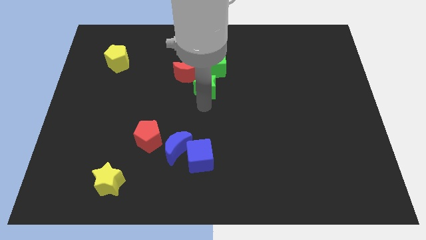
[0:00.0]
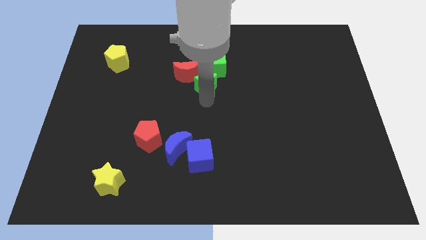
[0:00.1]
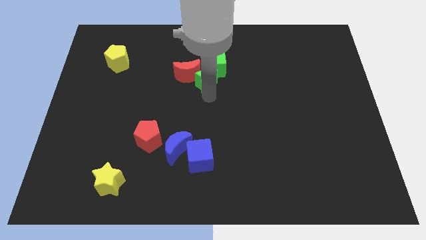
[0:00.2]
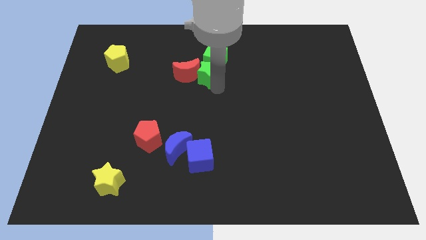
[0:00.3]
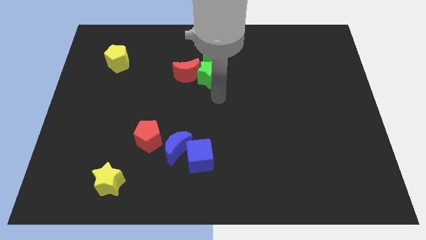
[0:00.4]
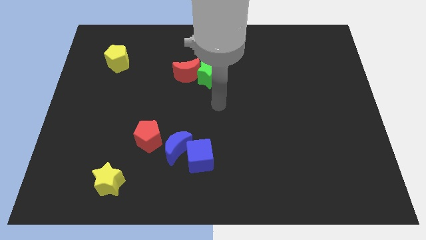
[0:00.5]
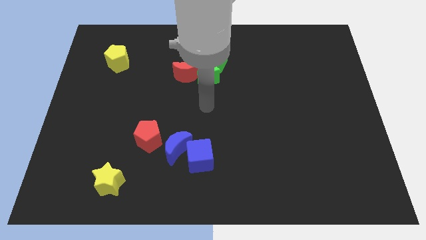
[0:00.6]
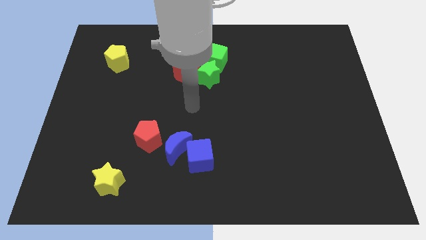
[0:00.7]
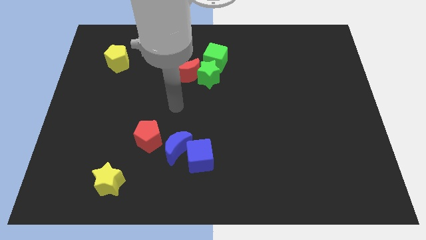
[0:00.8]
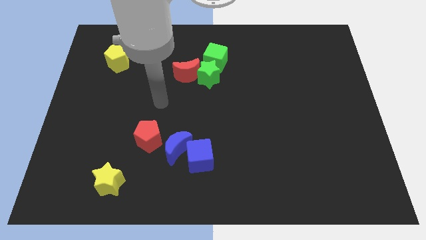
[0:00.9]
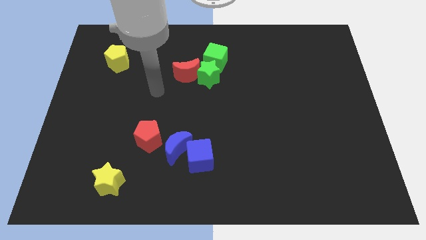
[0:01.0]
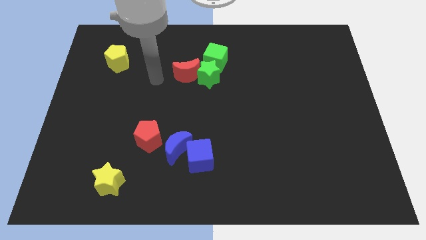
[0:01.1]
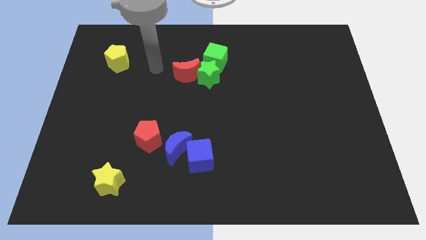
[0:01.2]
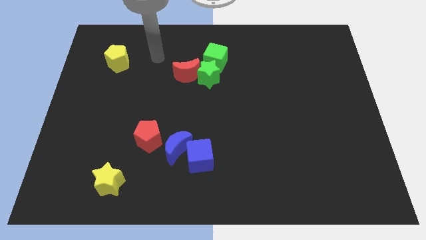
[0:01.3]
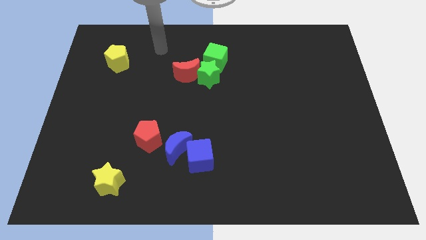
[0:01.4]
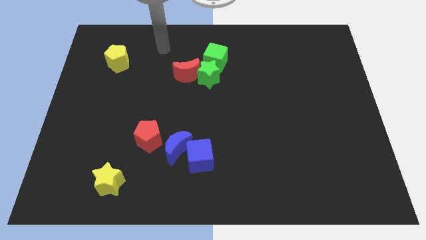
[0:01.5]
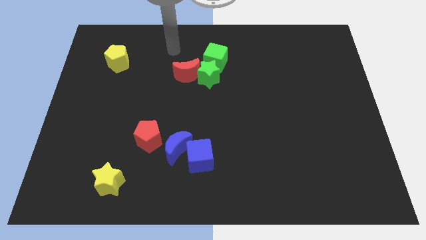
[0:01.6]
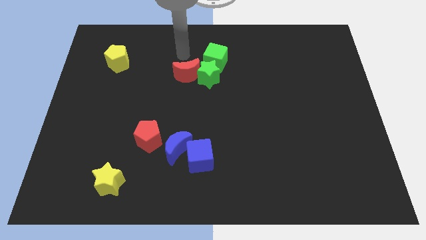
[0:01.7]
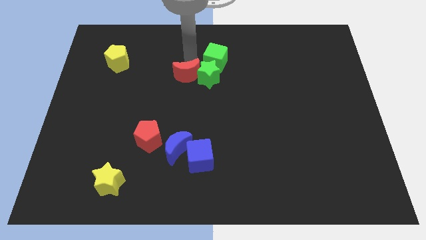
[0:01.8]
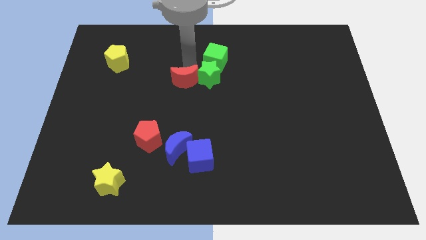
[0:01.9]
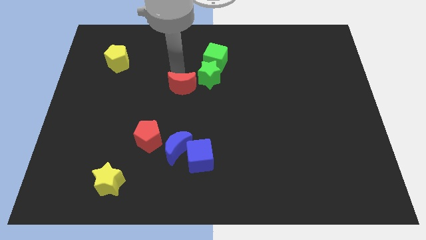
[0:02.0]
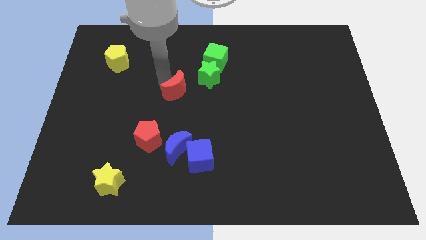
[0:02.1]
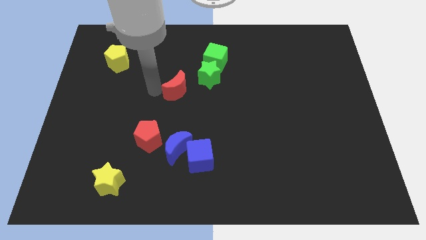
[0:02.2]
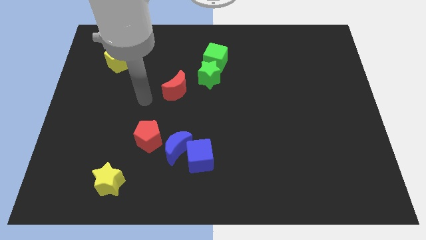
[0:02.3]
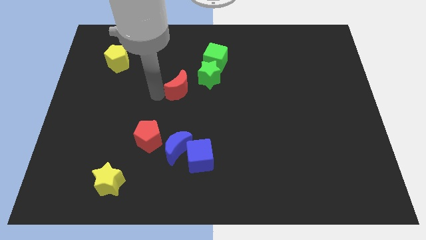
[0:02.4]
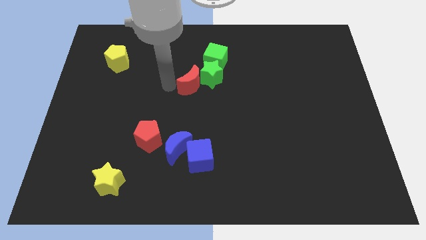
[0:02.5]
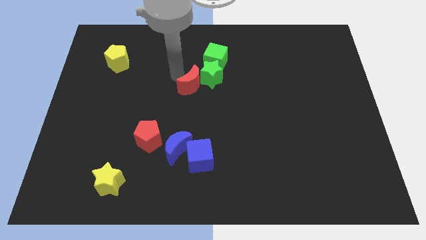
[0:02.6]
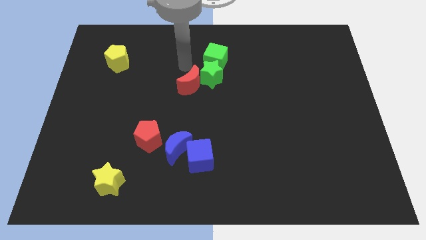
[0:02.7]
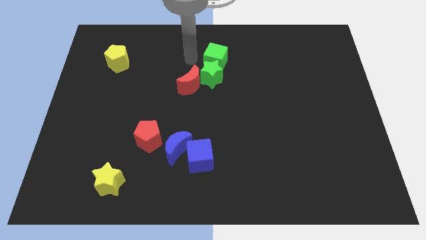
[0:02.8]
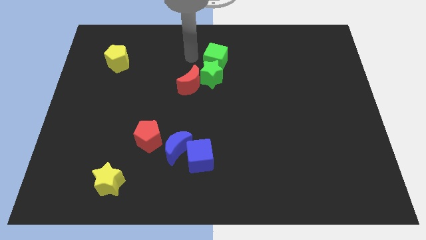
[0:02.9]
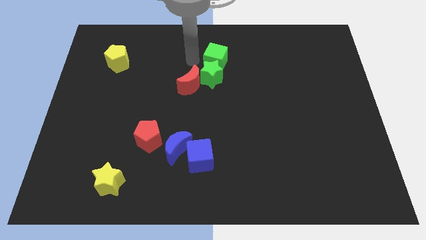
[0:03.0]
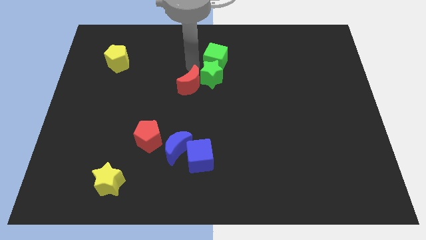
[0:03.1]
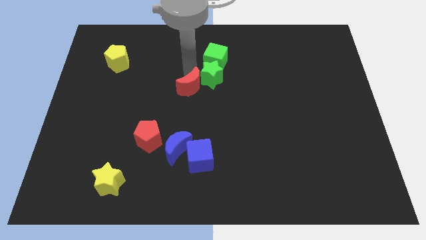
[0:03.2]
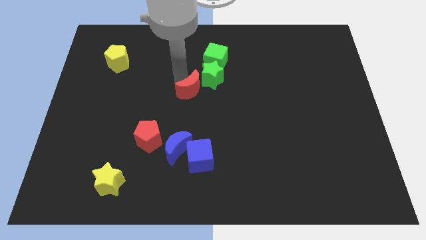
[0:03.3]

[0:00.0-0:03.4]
push the red crescent away from the green star

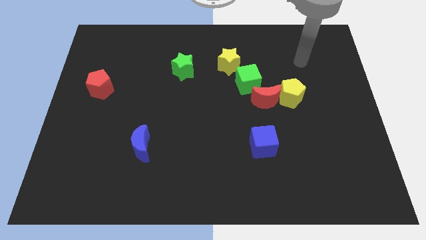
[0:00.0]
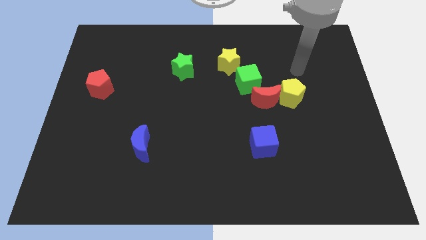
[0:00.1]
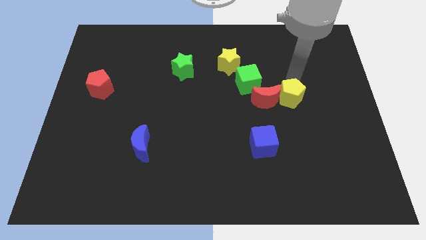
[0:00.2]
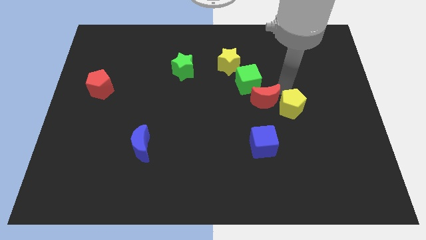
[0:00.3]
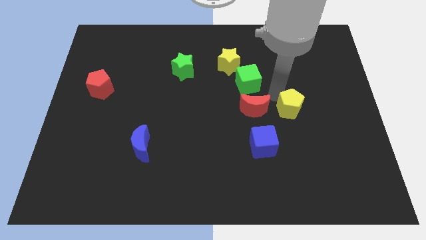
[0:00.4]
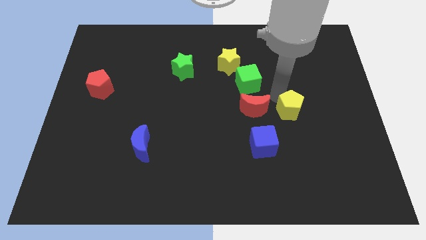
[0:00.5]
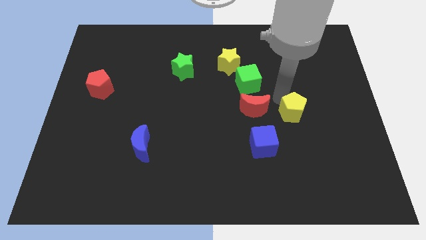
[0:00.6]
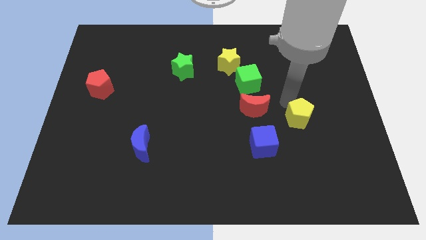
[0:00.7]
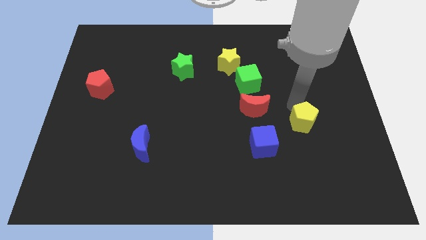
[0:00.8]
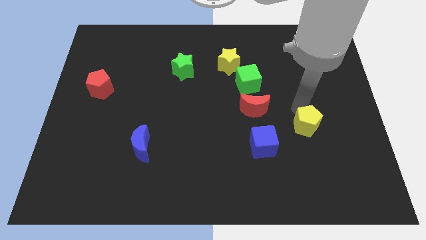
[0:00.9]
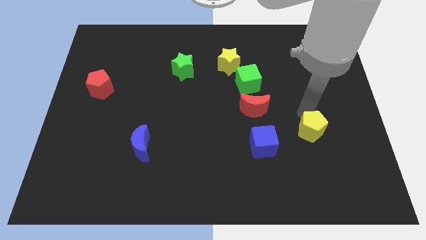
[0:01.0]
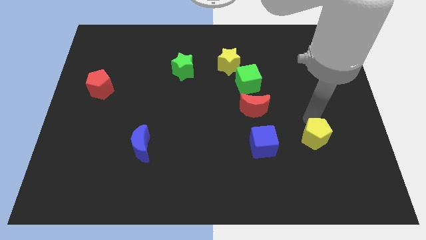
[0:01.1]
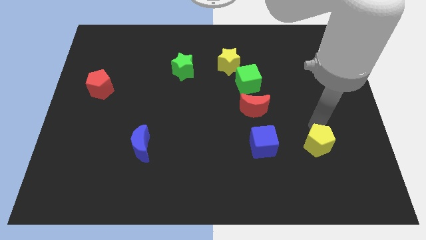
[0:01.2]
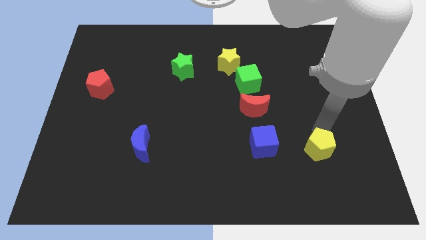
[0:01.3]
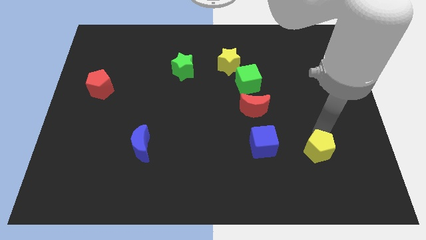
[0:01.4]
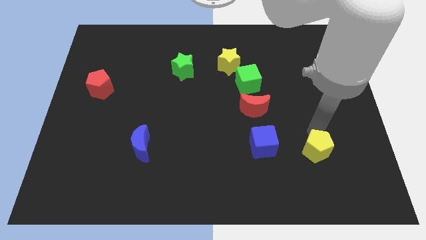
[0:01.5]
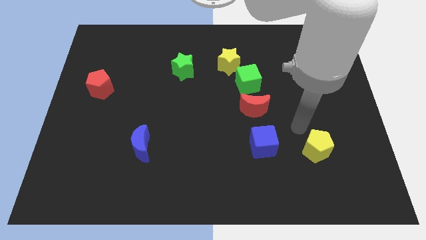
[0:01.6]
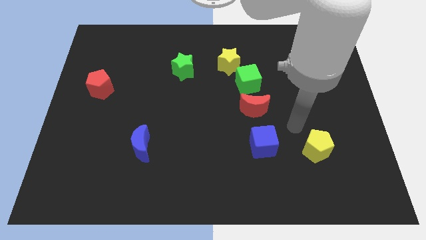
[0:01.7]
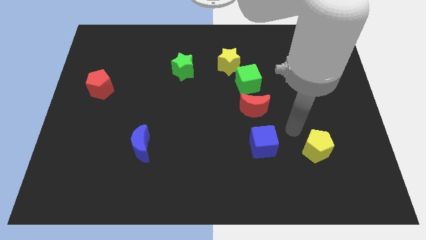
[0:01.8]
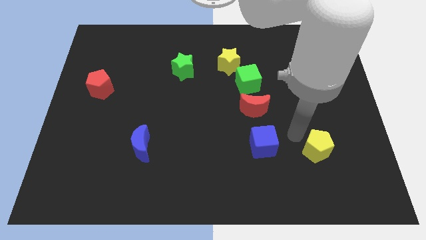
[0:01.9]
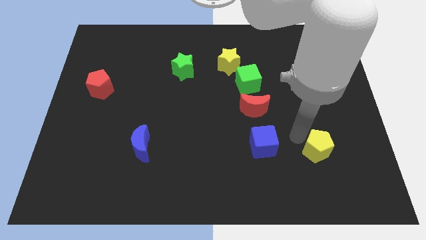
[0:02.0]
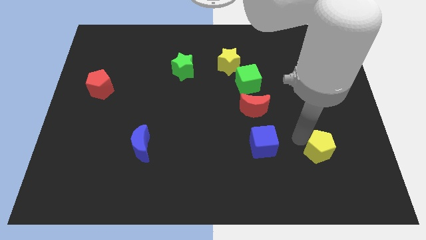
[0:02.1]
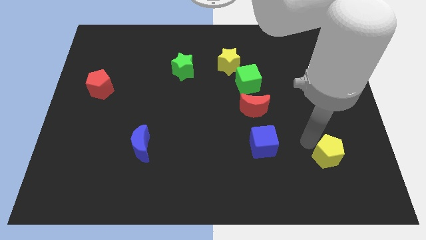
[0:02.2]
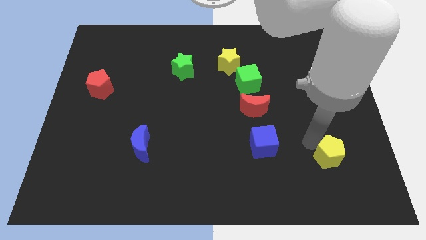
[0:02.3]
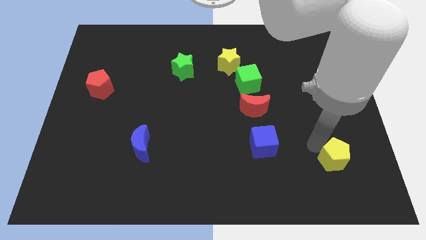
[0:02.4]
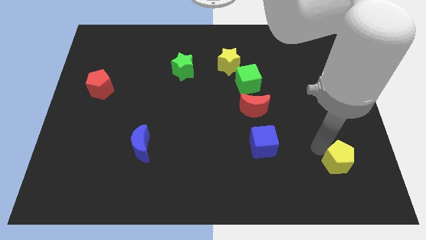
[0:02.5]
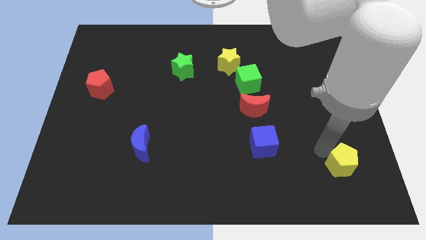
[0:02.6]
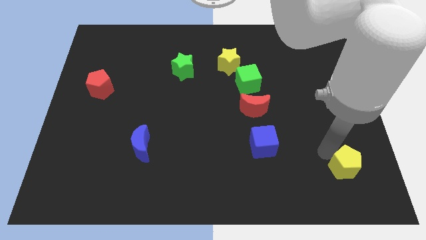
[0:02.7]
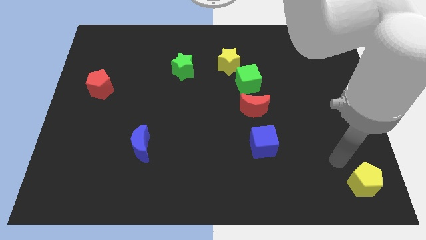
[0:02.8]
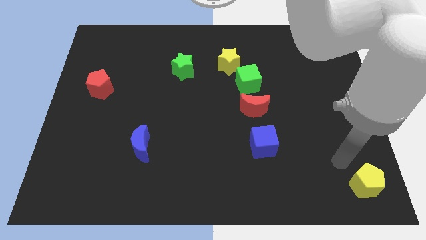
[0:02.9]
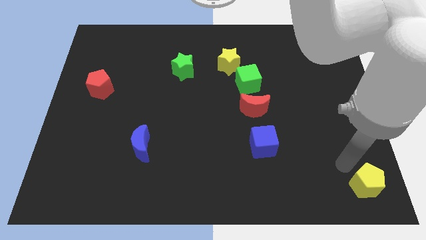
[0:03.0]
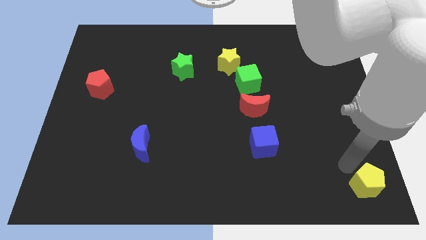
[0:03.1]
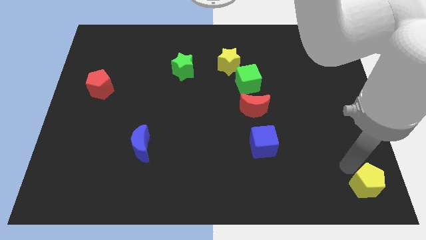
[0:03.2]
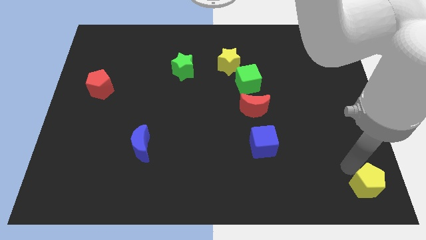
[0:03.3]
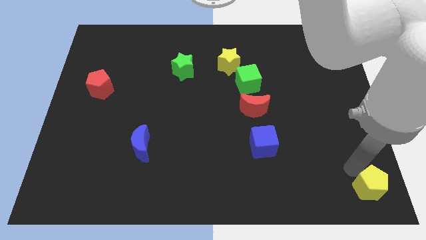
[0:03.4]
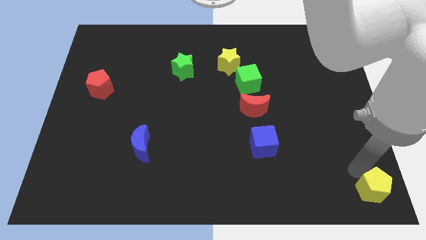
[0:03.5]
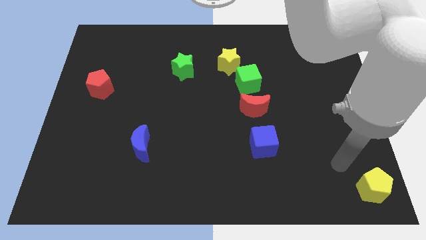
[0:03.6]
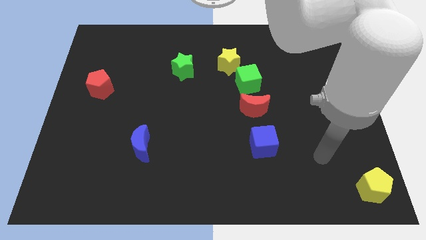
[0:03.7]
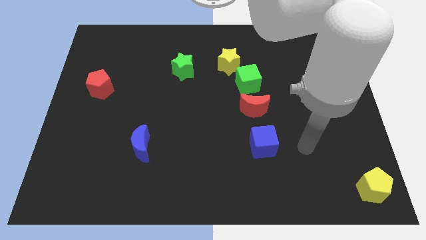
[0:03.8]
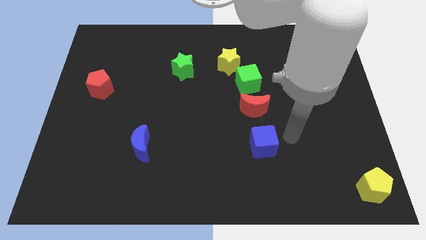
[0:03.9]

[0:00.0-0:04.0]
move the yellow pentagon towards the bottom right corner of the board and move away

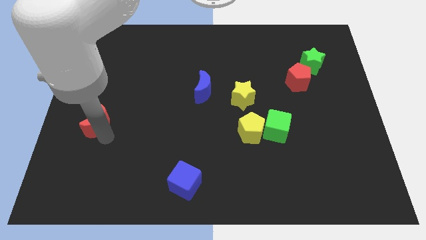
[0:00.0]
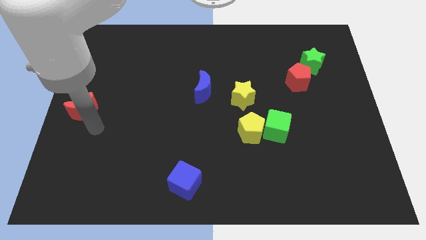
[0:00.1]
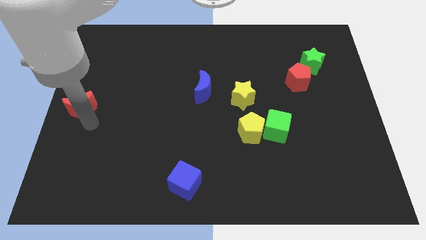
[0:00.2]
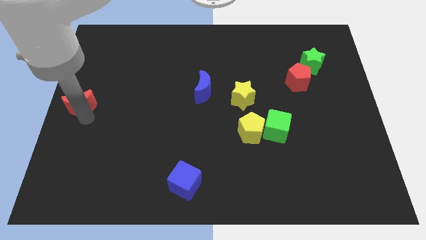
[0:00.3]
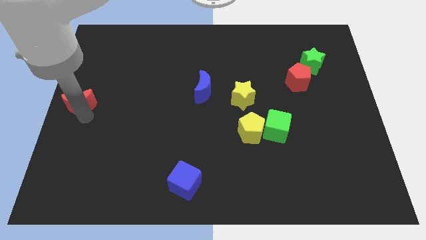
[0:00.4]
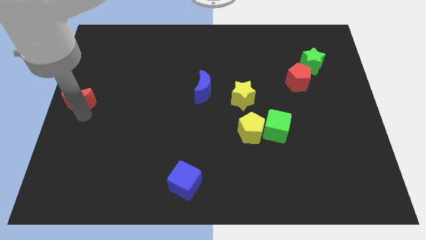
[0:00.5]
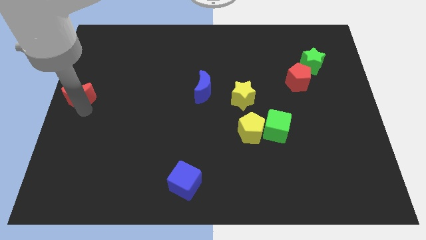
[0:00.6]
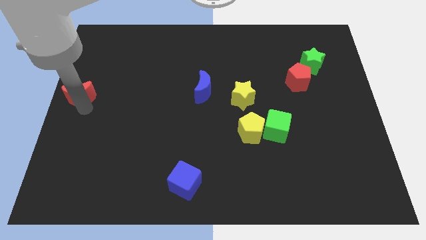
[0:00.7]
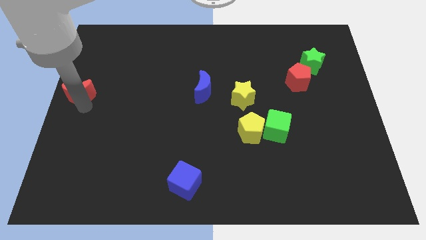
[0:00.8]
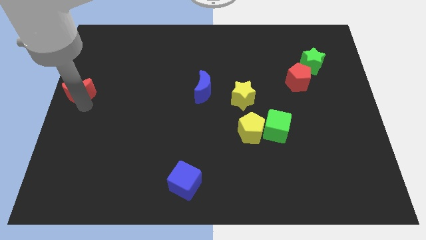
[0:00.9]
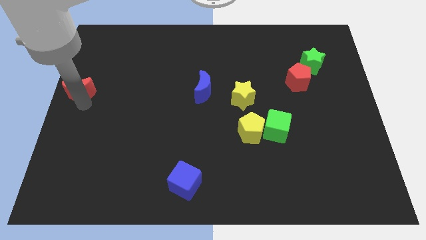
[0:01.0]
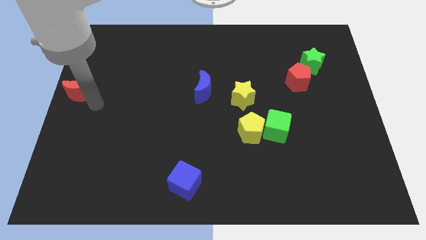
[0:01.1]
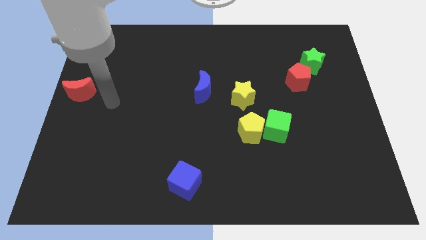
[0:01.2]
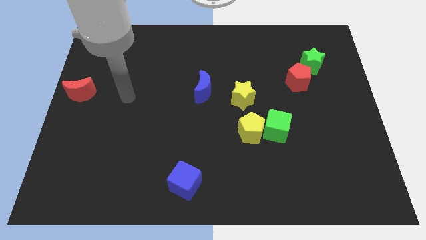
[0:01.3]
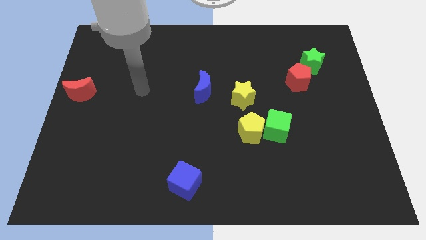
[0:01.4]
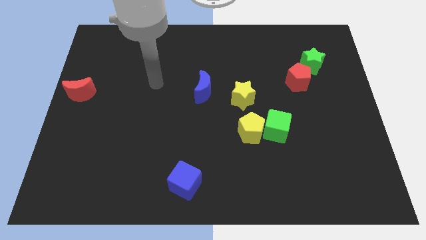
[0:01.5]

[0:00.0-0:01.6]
put the red crescent to the left of the blue crescent

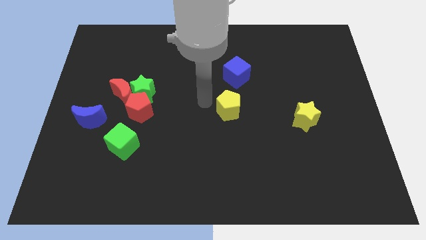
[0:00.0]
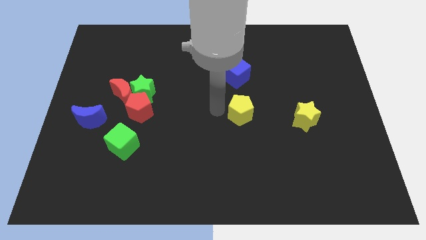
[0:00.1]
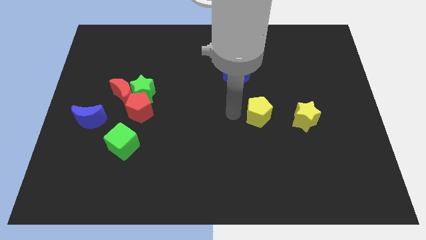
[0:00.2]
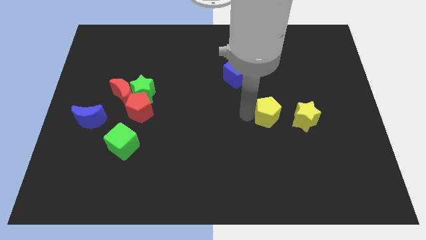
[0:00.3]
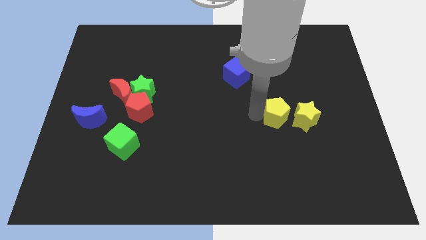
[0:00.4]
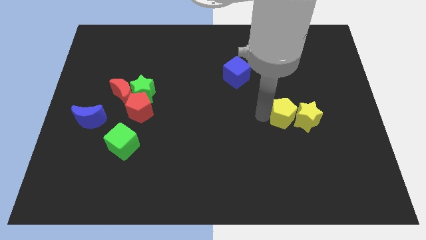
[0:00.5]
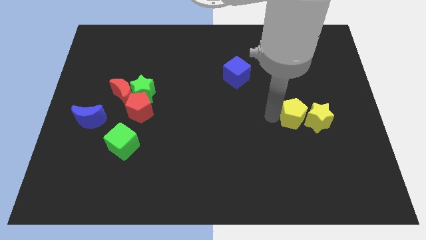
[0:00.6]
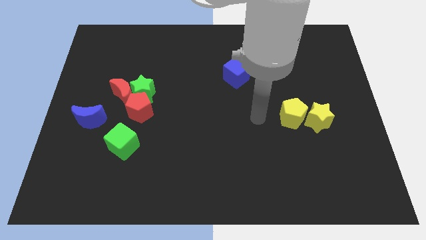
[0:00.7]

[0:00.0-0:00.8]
place the yellow pentagon to the left of the yellow star
